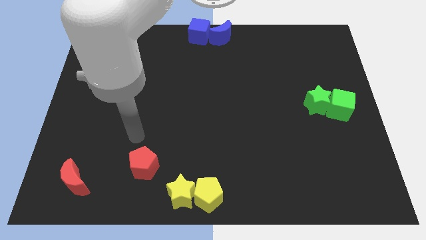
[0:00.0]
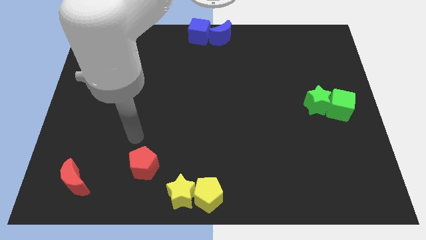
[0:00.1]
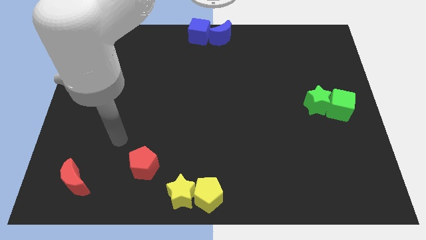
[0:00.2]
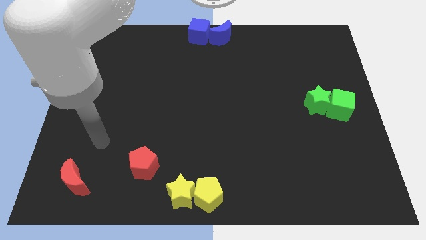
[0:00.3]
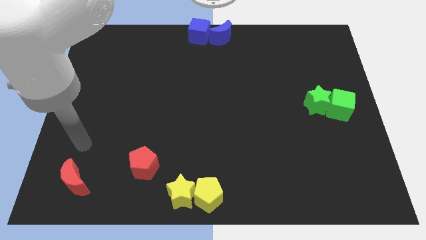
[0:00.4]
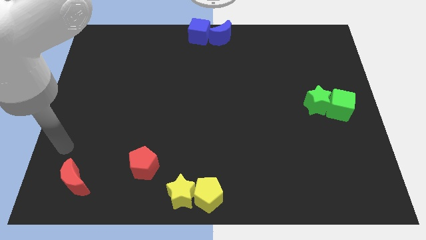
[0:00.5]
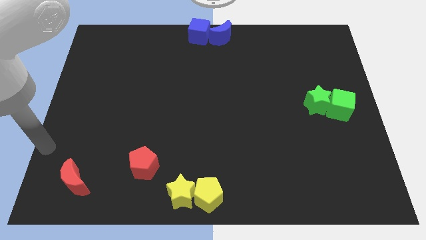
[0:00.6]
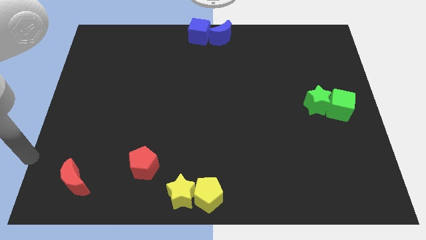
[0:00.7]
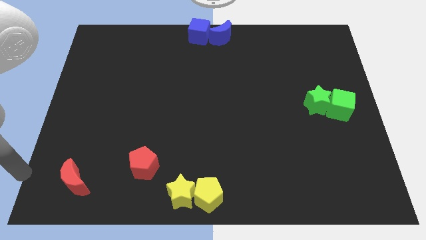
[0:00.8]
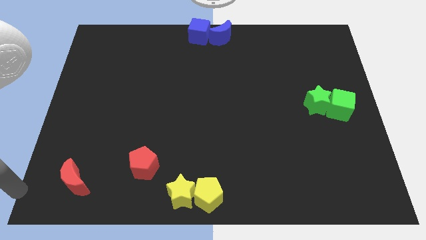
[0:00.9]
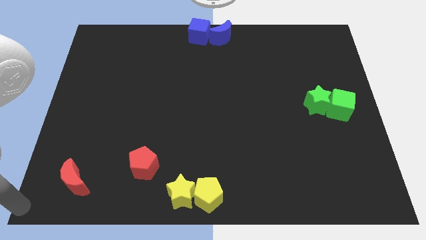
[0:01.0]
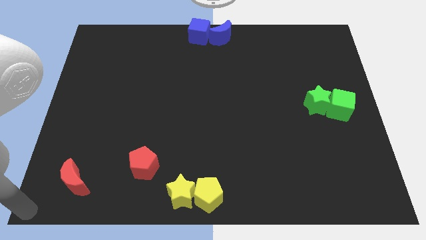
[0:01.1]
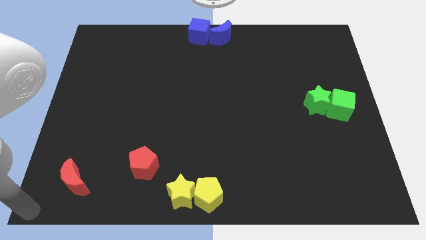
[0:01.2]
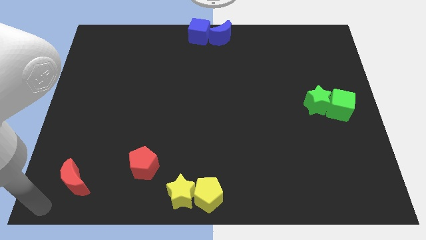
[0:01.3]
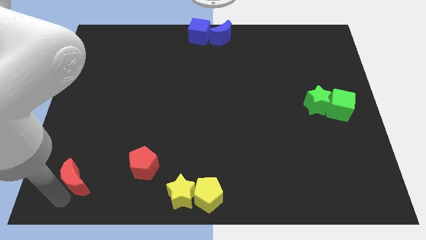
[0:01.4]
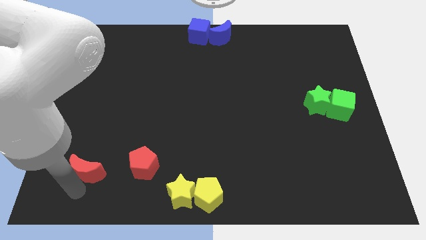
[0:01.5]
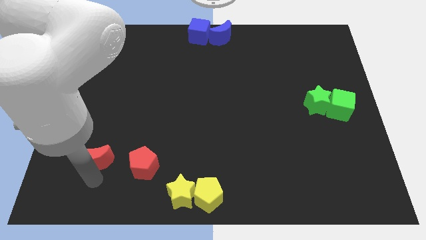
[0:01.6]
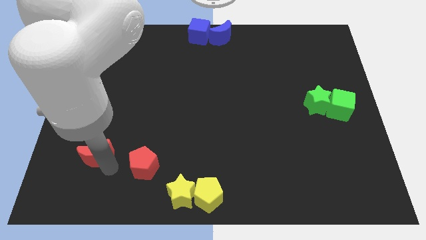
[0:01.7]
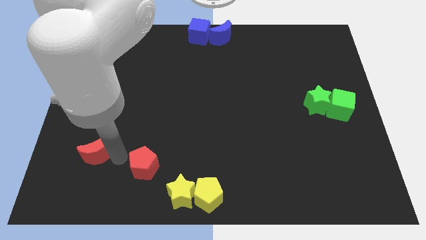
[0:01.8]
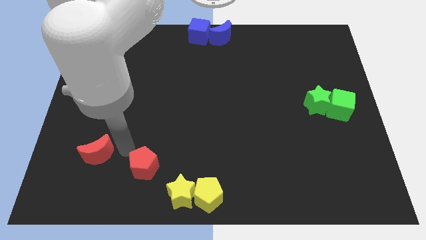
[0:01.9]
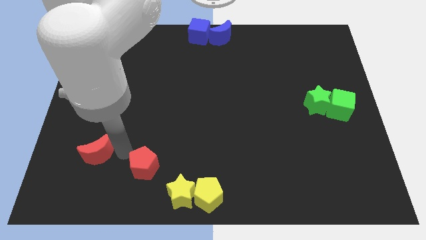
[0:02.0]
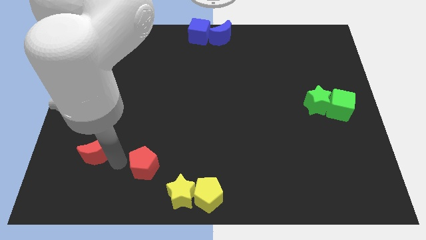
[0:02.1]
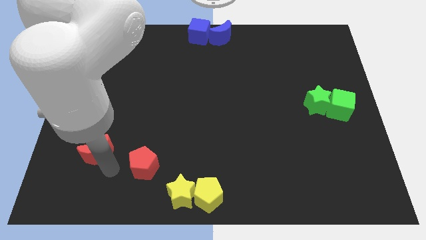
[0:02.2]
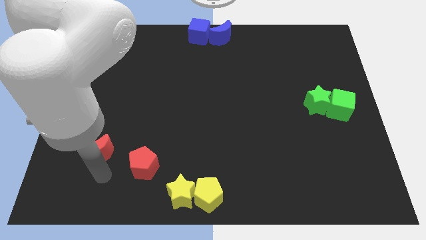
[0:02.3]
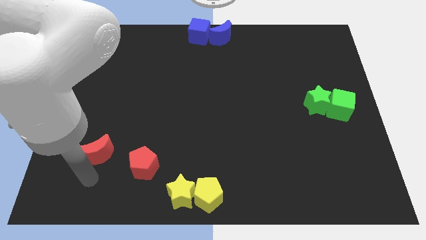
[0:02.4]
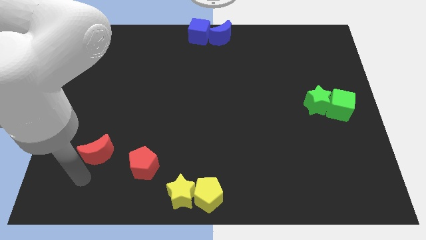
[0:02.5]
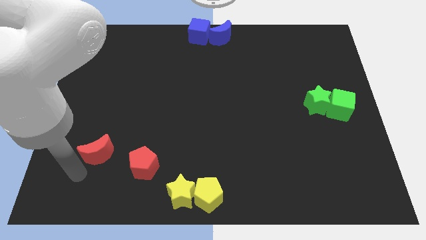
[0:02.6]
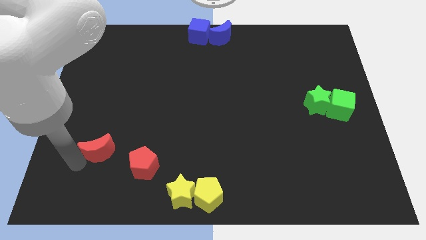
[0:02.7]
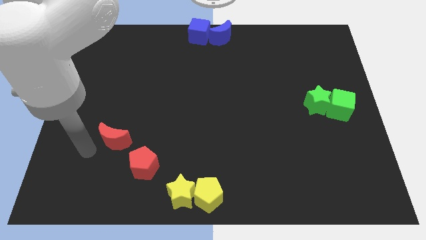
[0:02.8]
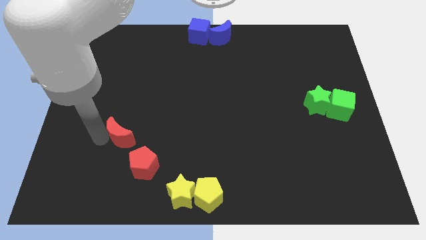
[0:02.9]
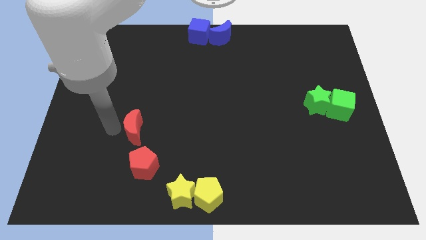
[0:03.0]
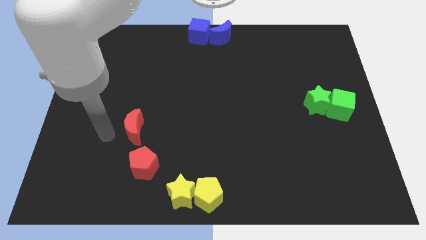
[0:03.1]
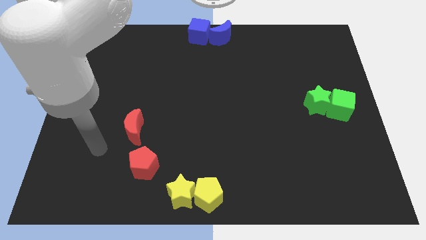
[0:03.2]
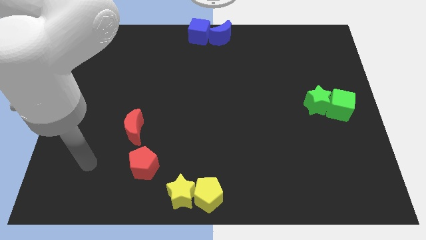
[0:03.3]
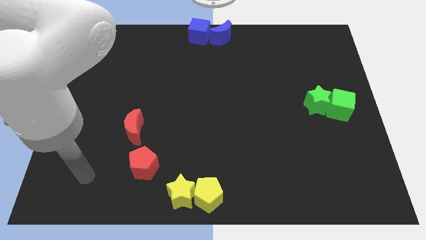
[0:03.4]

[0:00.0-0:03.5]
push the red moon above the red pentagon

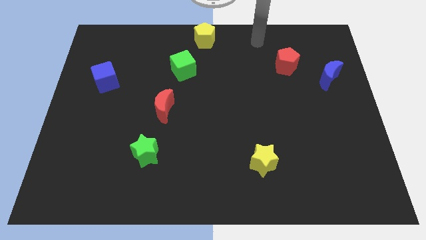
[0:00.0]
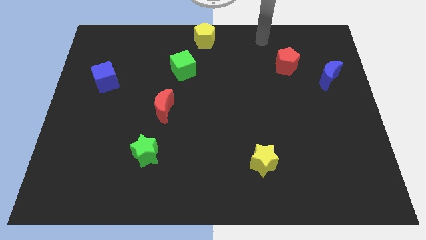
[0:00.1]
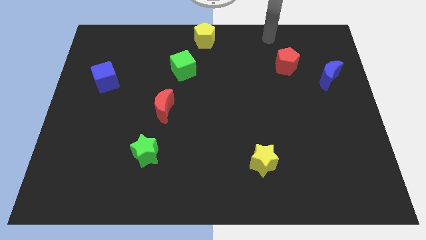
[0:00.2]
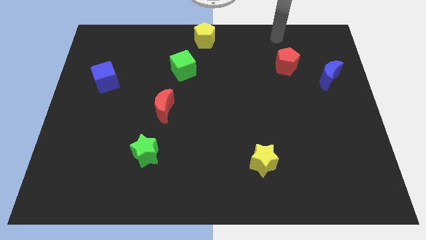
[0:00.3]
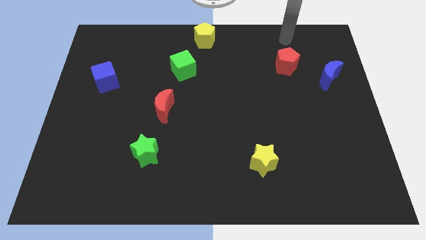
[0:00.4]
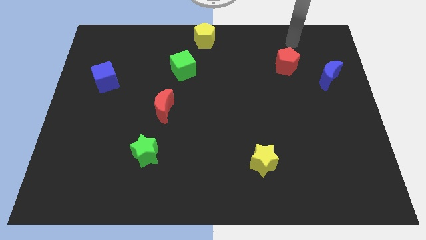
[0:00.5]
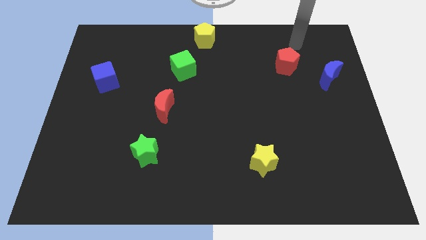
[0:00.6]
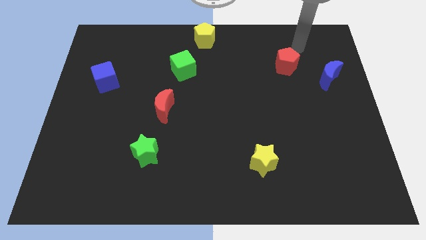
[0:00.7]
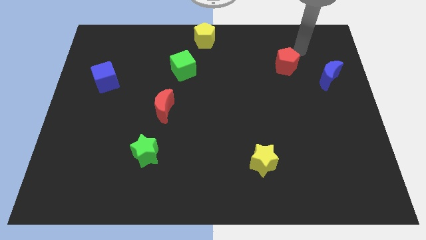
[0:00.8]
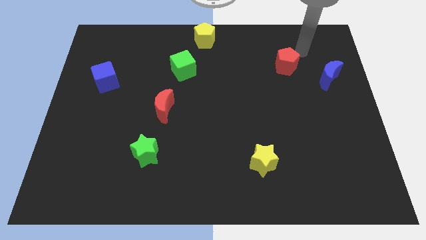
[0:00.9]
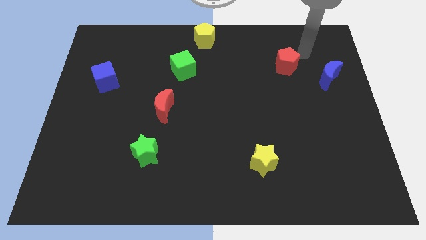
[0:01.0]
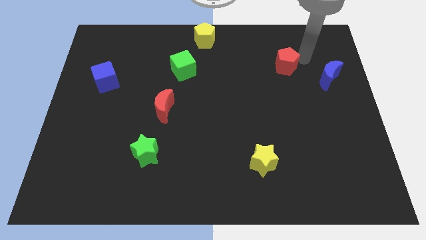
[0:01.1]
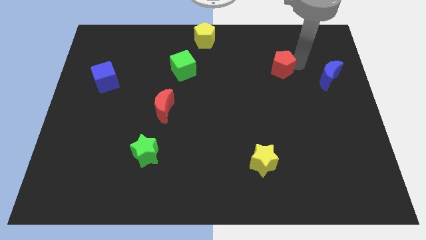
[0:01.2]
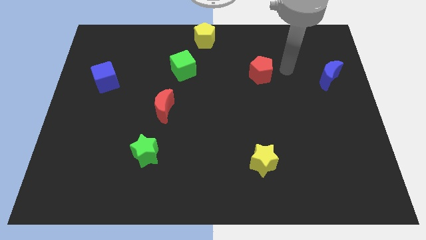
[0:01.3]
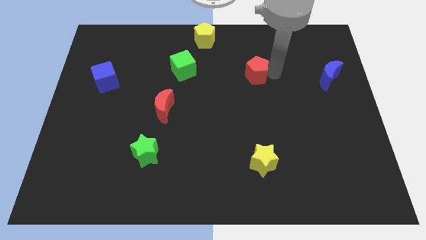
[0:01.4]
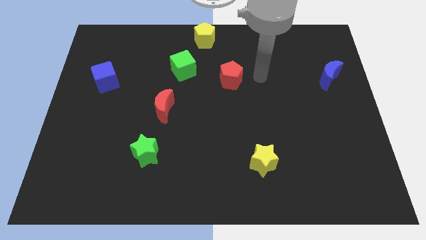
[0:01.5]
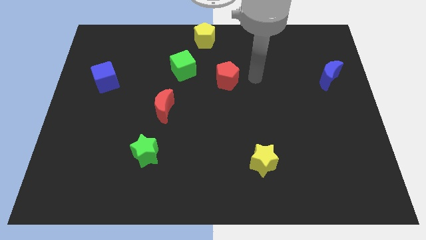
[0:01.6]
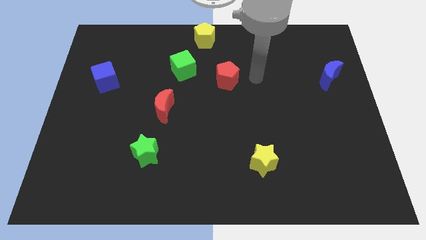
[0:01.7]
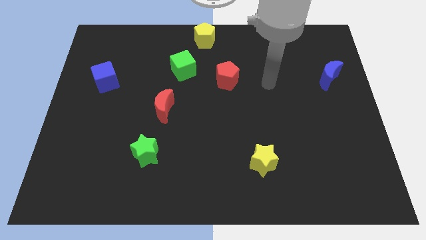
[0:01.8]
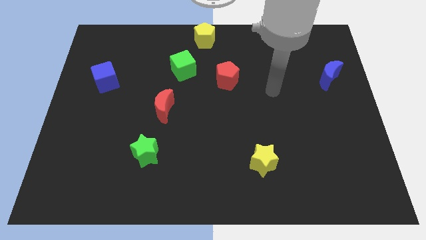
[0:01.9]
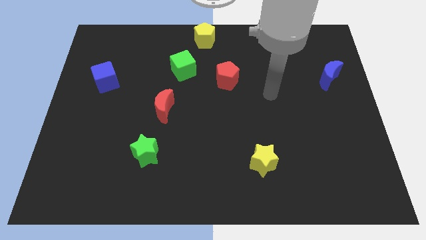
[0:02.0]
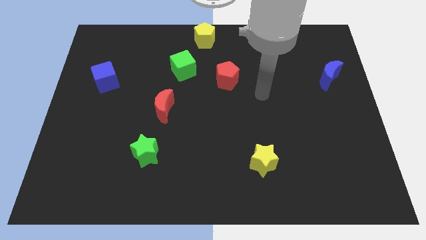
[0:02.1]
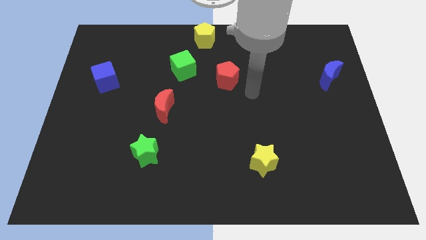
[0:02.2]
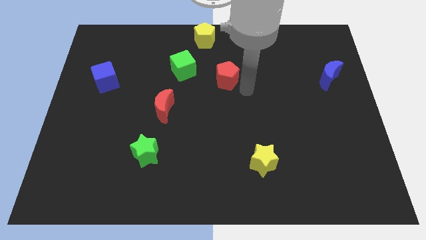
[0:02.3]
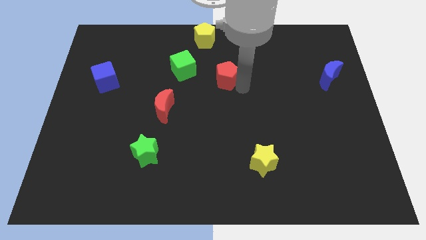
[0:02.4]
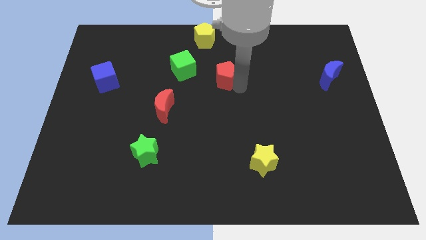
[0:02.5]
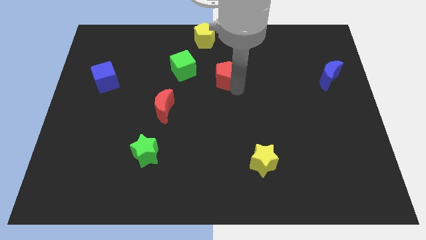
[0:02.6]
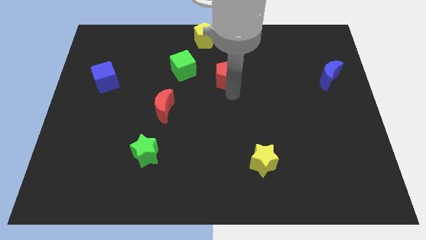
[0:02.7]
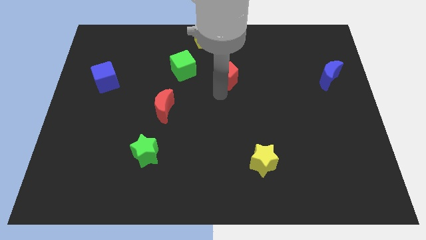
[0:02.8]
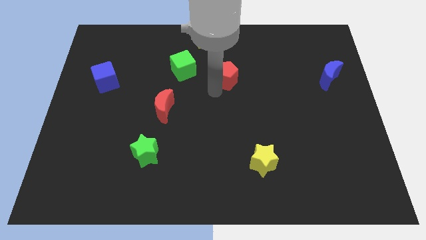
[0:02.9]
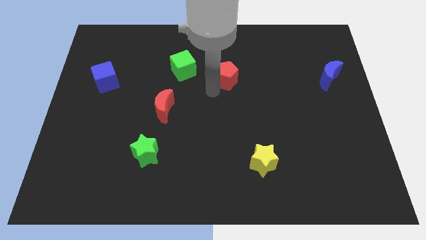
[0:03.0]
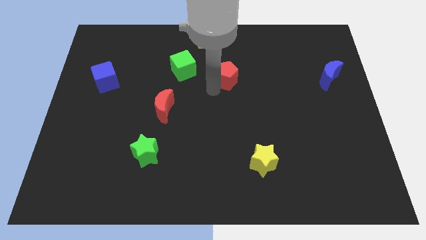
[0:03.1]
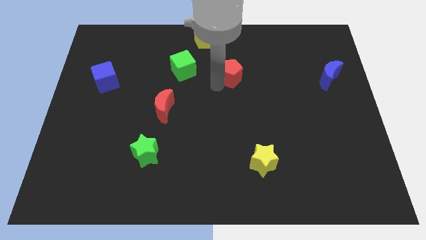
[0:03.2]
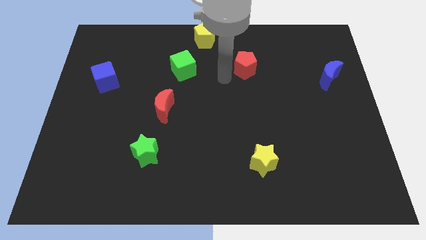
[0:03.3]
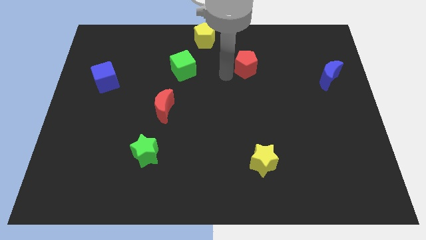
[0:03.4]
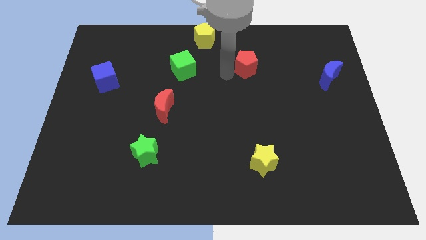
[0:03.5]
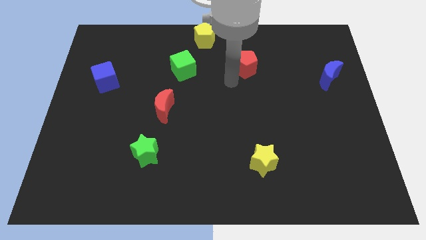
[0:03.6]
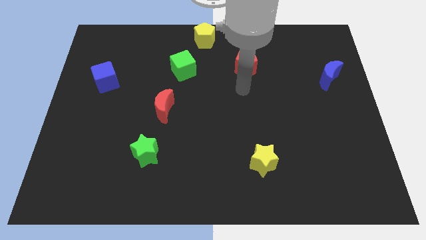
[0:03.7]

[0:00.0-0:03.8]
place the red pentagon above the yellow star

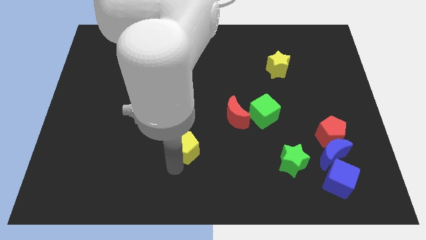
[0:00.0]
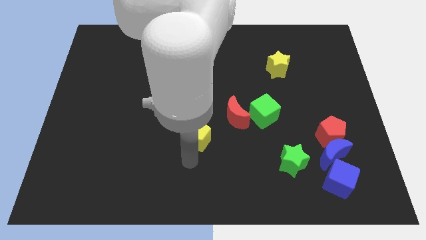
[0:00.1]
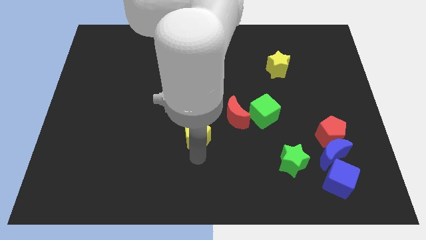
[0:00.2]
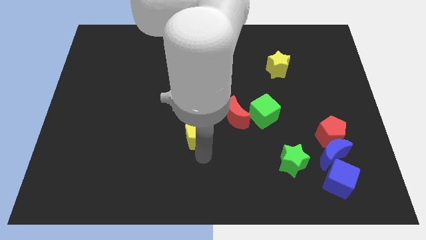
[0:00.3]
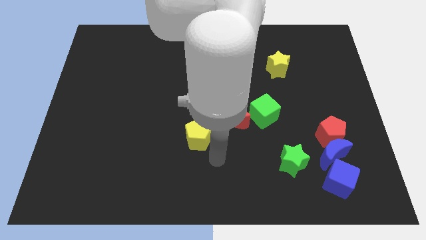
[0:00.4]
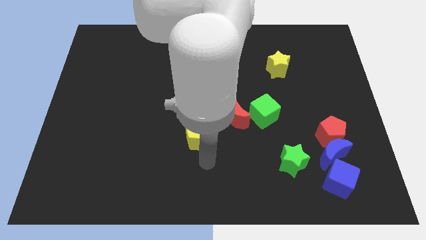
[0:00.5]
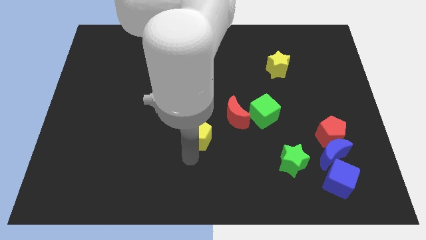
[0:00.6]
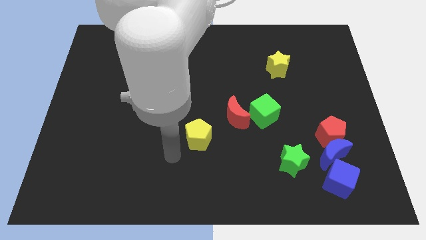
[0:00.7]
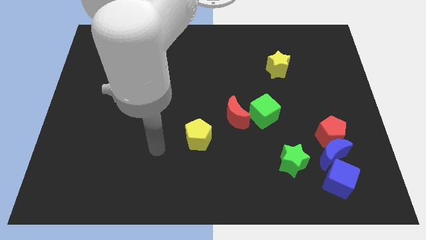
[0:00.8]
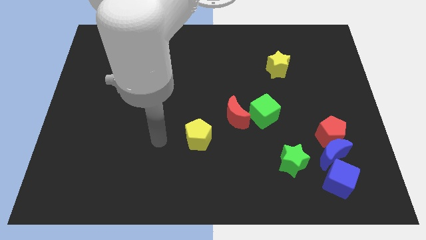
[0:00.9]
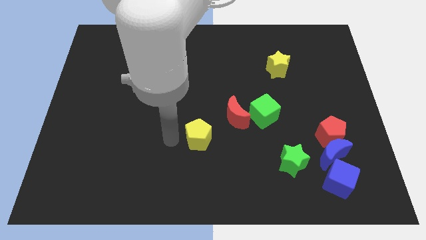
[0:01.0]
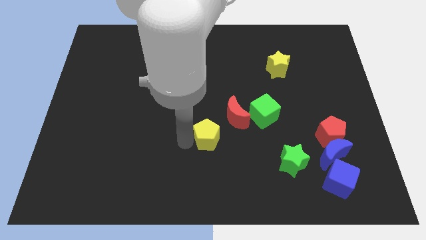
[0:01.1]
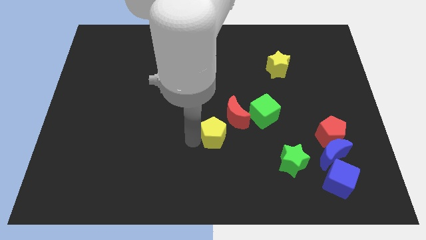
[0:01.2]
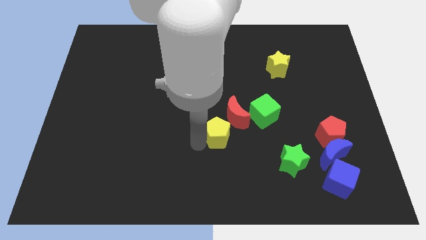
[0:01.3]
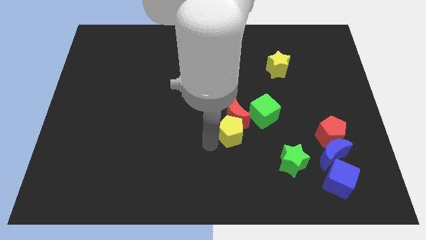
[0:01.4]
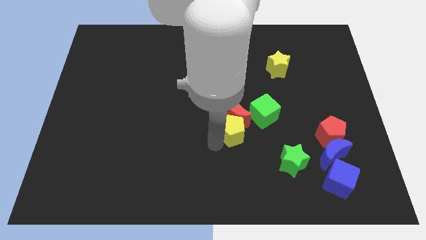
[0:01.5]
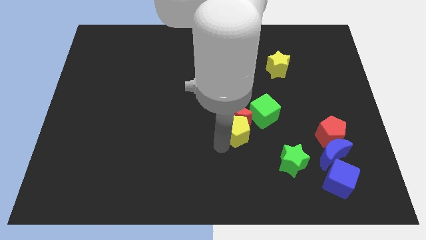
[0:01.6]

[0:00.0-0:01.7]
move yellow pentagon to the bottom of red moon
